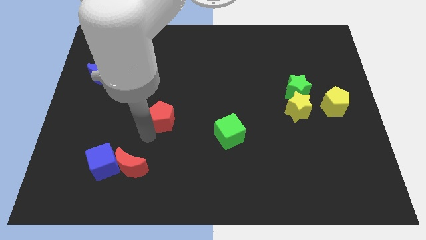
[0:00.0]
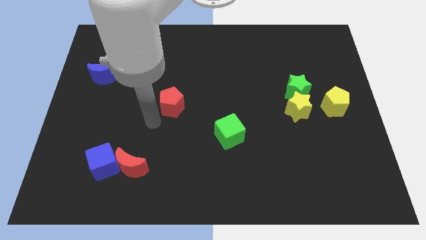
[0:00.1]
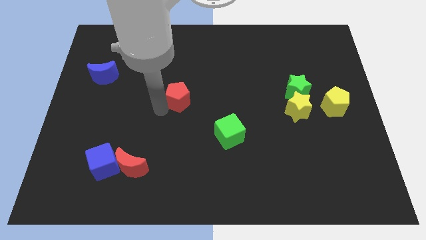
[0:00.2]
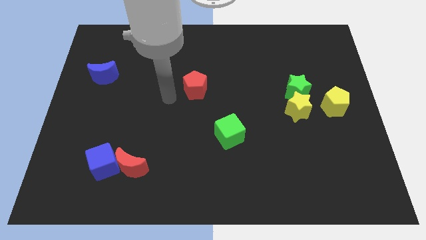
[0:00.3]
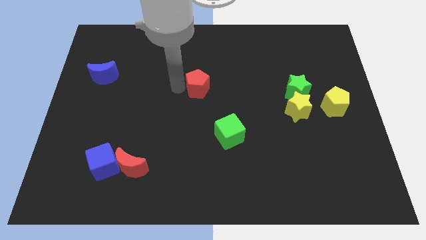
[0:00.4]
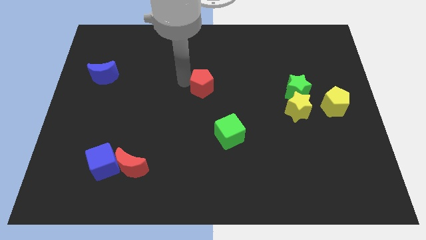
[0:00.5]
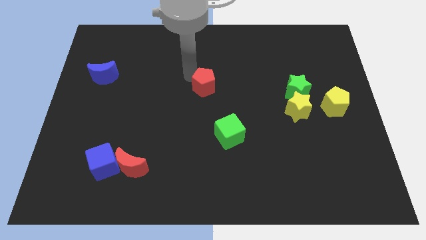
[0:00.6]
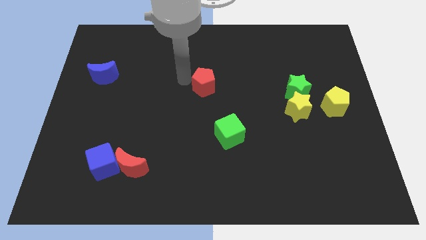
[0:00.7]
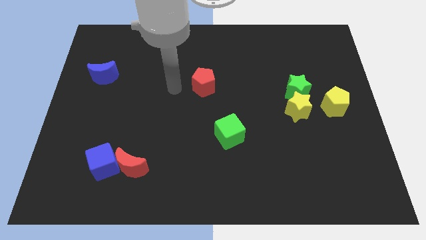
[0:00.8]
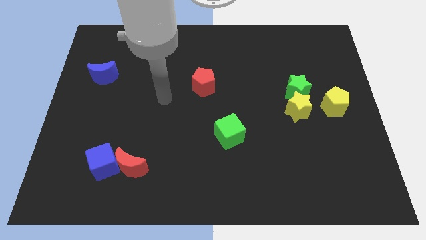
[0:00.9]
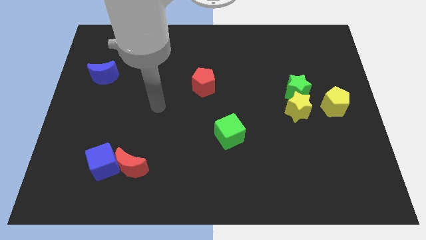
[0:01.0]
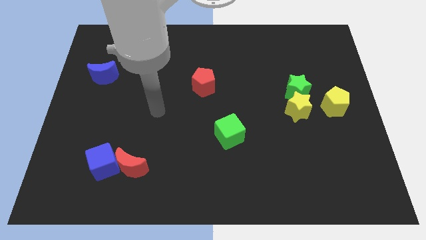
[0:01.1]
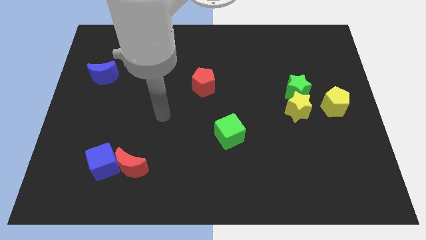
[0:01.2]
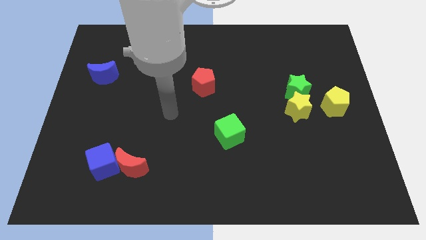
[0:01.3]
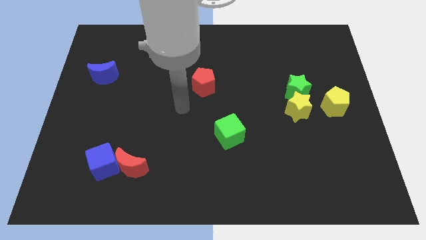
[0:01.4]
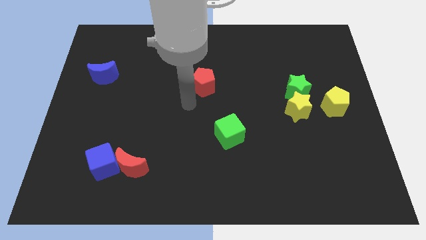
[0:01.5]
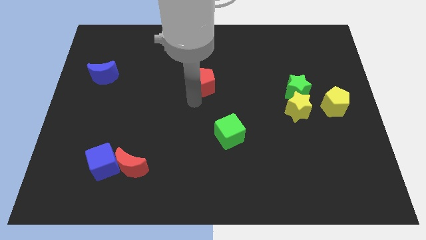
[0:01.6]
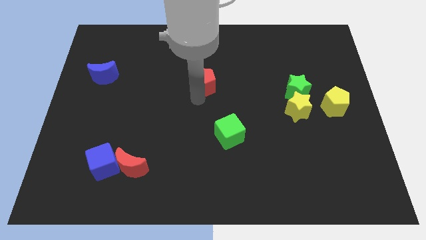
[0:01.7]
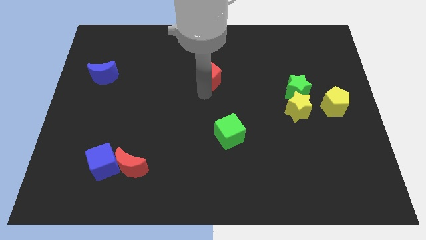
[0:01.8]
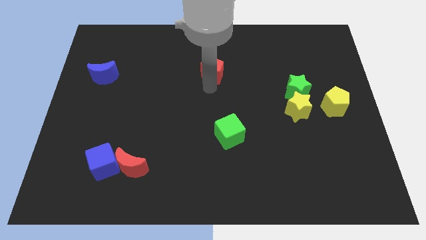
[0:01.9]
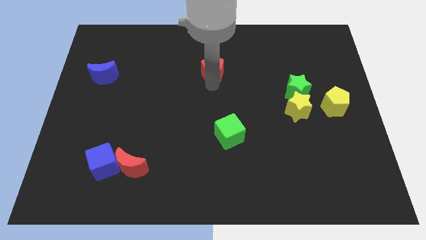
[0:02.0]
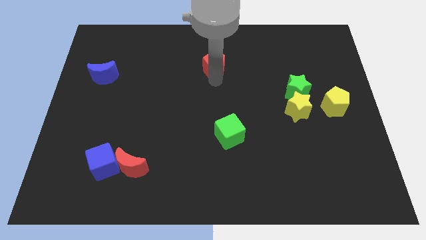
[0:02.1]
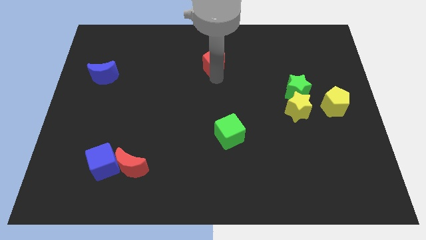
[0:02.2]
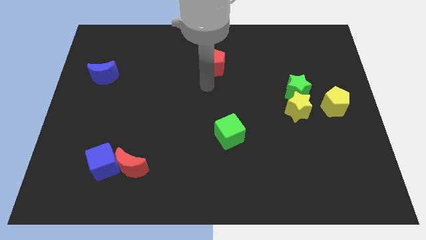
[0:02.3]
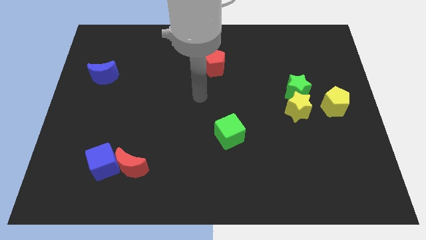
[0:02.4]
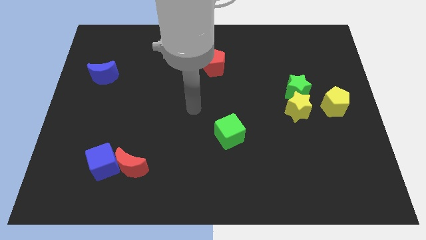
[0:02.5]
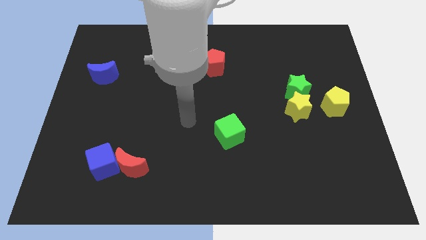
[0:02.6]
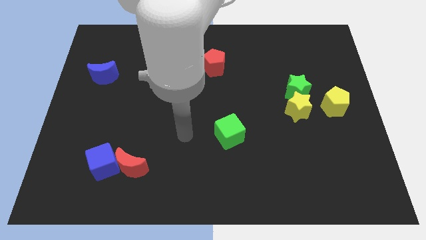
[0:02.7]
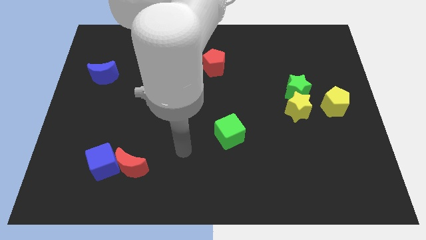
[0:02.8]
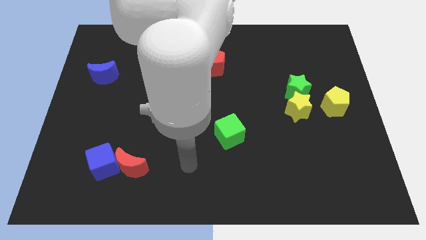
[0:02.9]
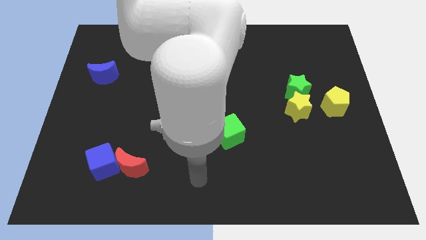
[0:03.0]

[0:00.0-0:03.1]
move the red pentagon towards the top of the board

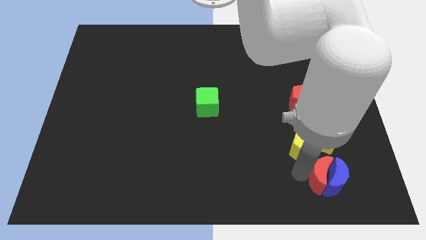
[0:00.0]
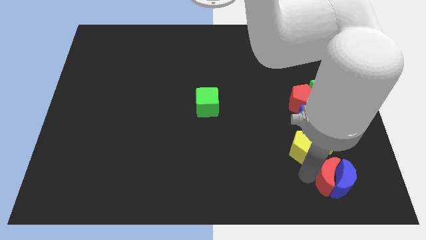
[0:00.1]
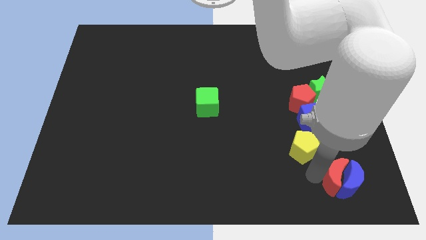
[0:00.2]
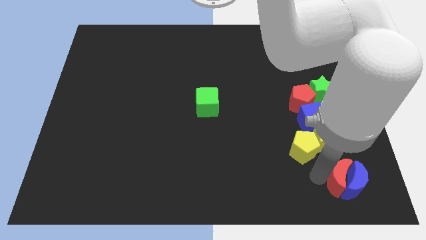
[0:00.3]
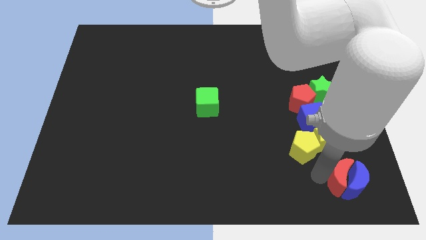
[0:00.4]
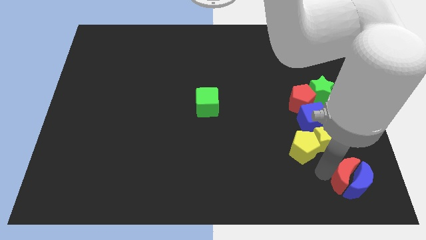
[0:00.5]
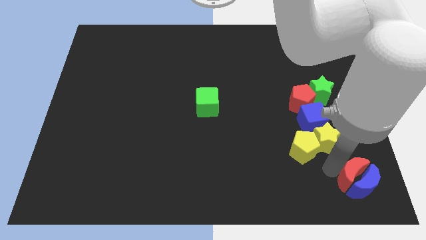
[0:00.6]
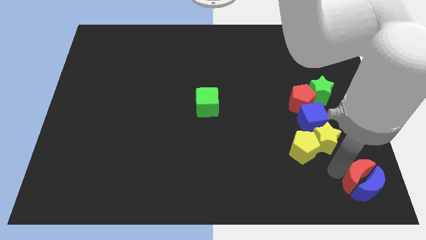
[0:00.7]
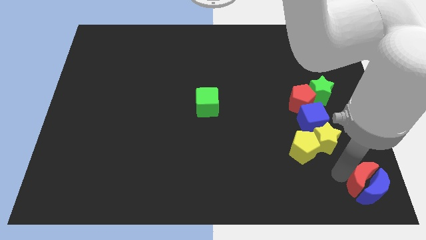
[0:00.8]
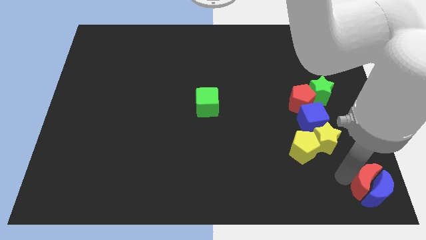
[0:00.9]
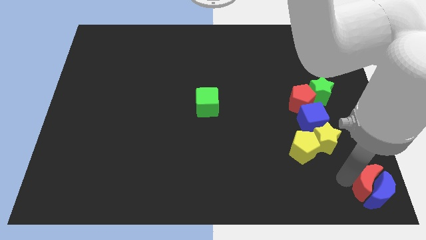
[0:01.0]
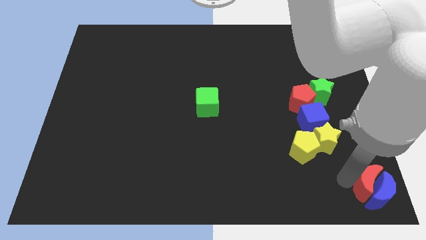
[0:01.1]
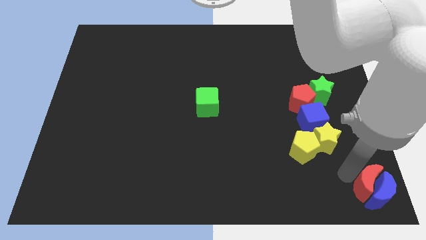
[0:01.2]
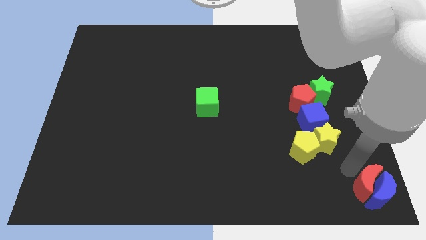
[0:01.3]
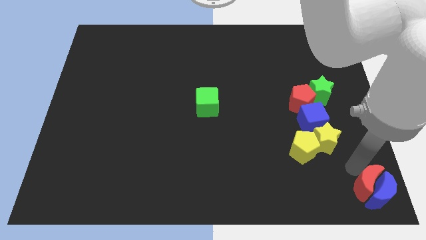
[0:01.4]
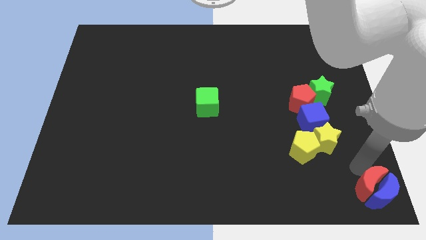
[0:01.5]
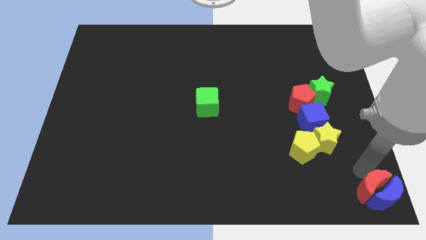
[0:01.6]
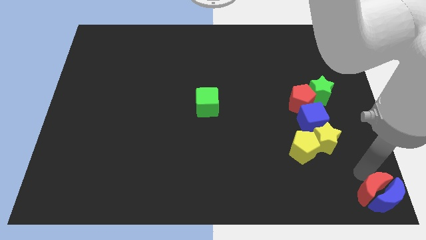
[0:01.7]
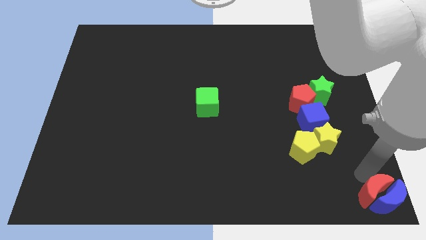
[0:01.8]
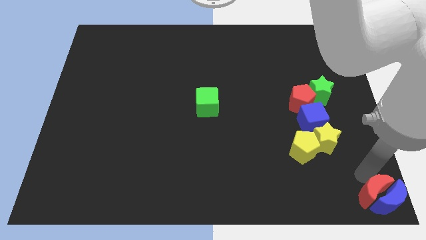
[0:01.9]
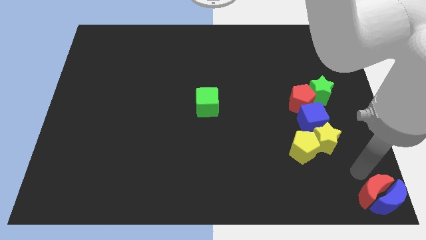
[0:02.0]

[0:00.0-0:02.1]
push red moon along with the blue moon to the bottom right

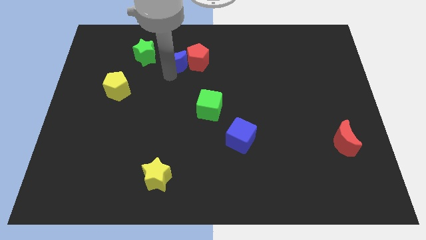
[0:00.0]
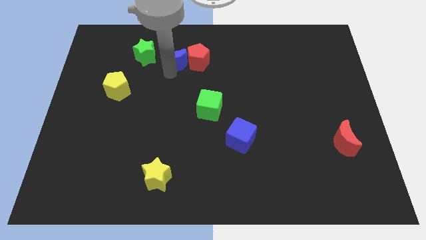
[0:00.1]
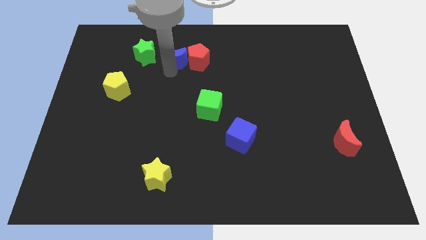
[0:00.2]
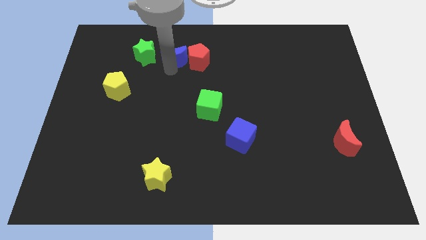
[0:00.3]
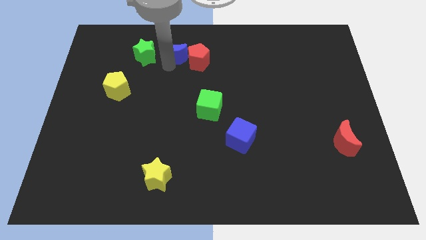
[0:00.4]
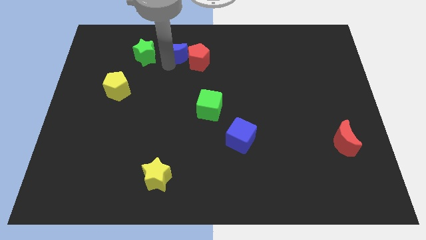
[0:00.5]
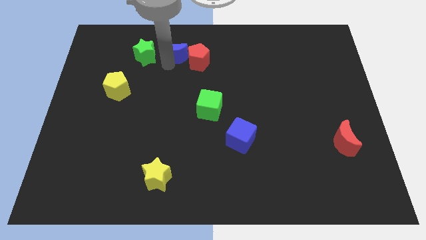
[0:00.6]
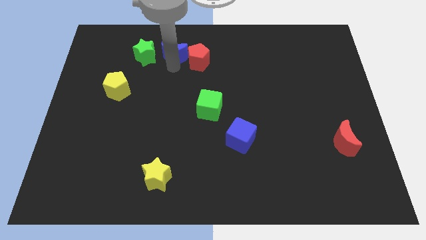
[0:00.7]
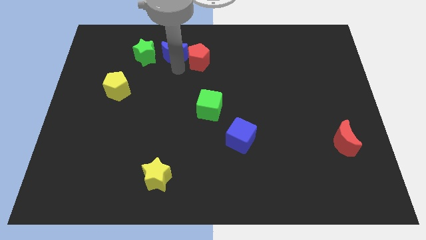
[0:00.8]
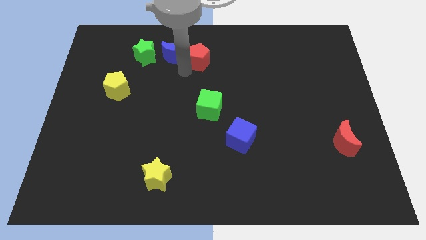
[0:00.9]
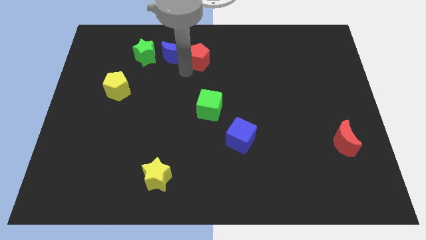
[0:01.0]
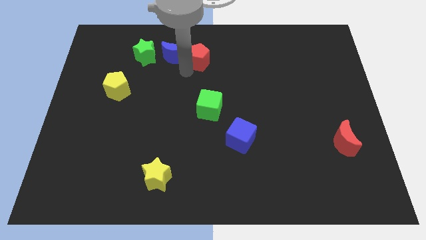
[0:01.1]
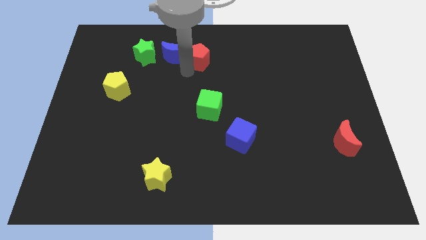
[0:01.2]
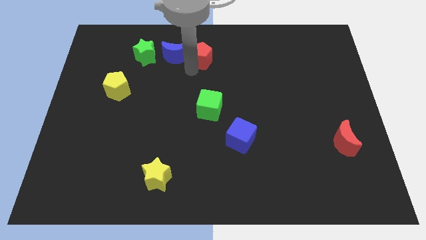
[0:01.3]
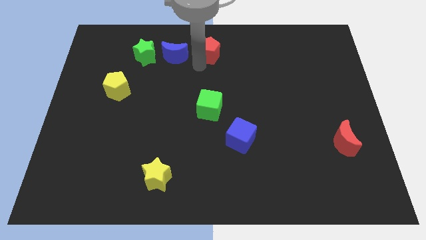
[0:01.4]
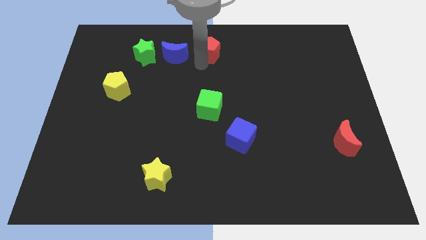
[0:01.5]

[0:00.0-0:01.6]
adjust the blue moon in between the red pentagon and green star

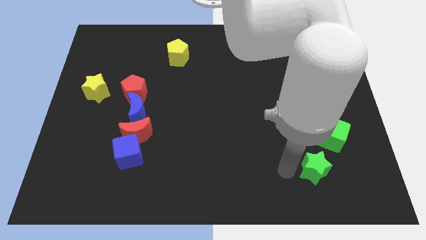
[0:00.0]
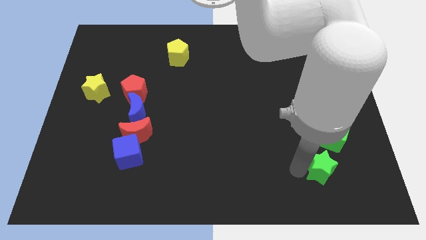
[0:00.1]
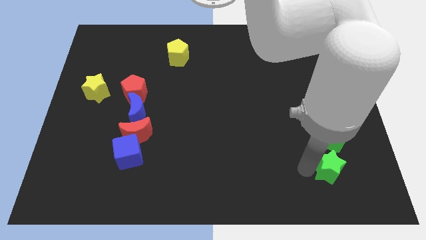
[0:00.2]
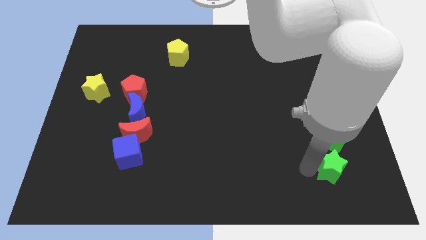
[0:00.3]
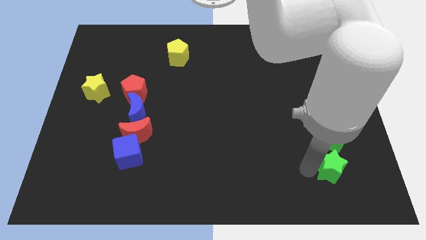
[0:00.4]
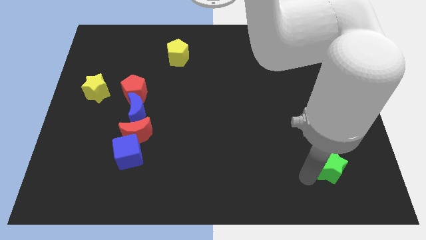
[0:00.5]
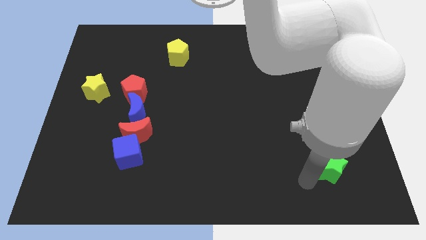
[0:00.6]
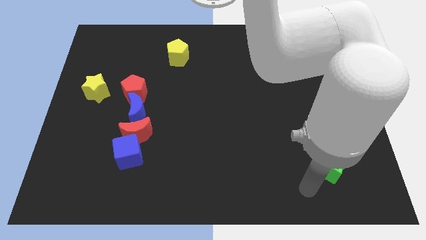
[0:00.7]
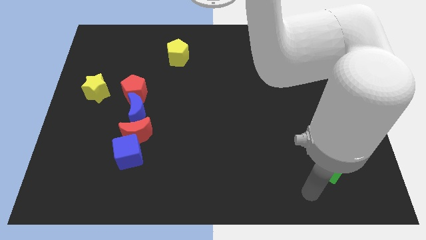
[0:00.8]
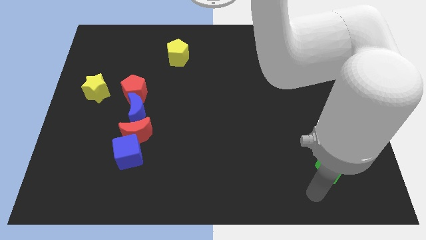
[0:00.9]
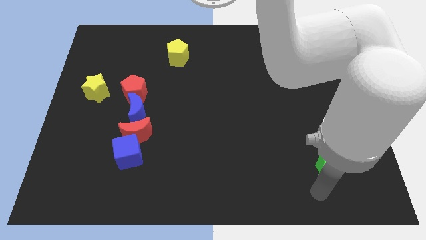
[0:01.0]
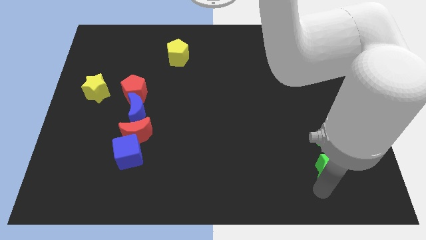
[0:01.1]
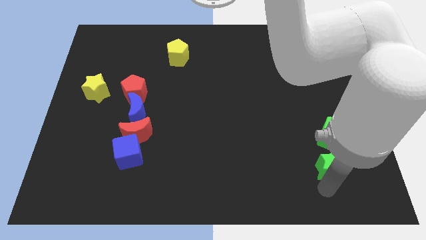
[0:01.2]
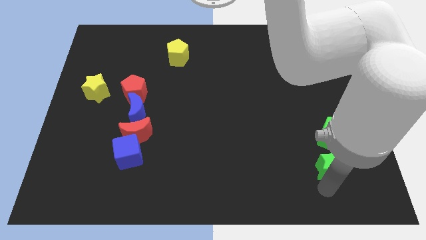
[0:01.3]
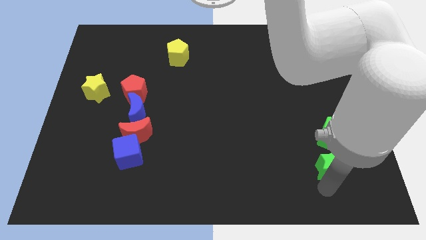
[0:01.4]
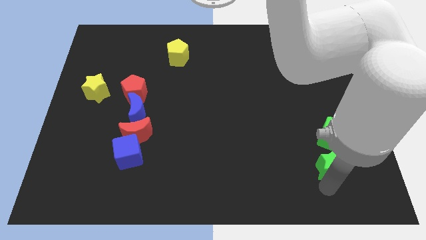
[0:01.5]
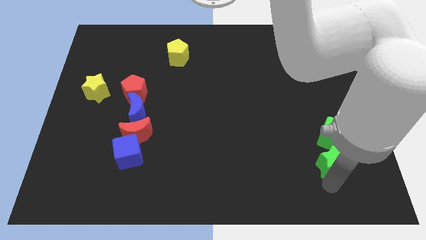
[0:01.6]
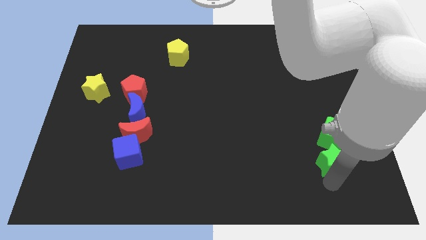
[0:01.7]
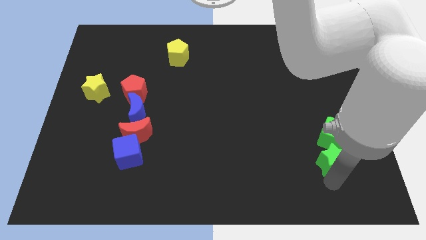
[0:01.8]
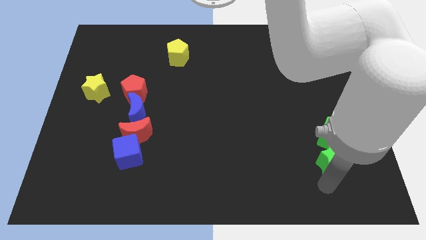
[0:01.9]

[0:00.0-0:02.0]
place the green star at the bottom of the green cube

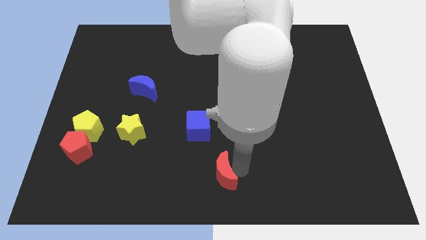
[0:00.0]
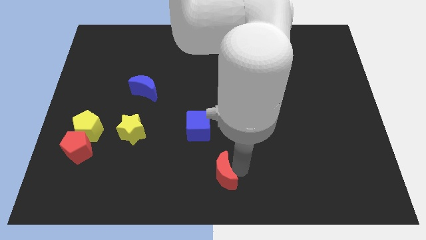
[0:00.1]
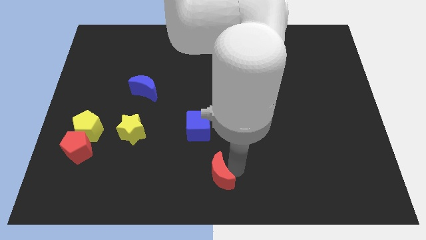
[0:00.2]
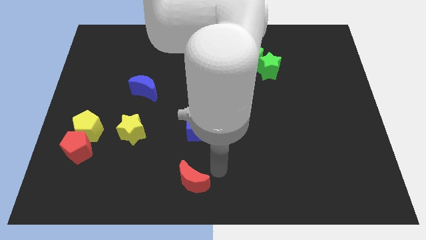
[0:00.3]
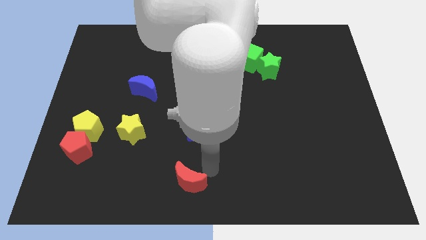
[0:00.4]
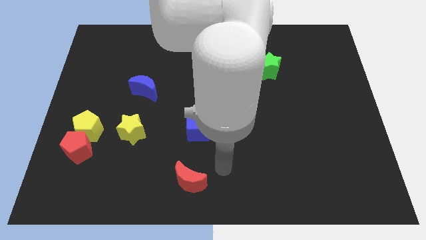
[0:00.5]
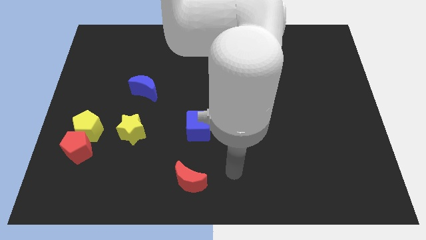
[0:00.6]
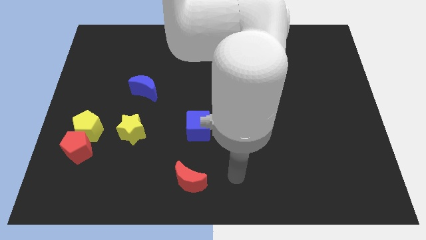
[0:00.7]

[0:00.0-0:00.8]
place the red crescent to the bottom of the blue cube
